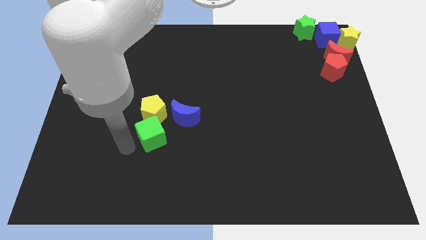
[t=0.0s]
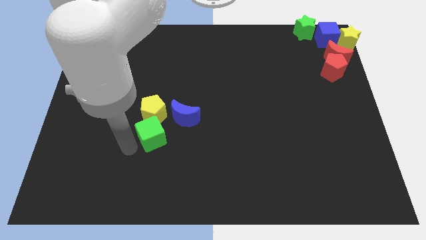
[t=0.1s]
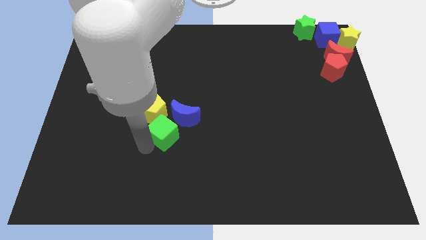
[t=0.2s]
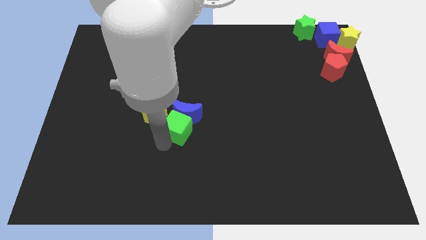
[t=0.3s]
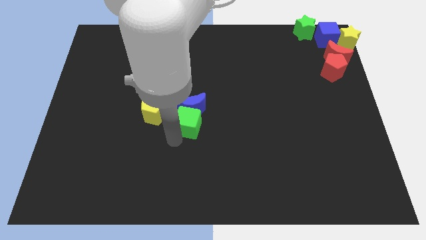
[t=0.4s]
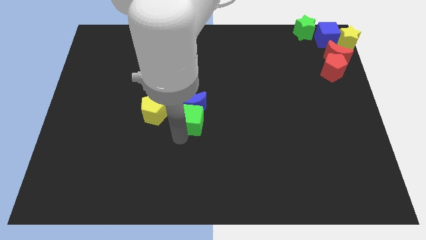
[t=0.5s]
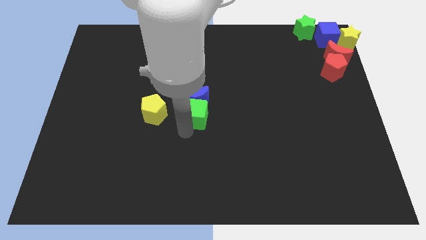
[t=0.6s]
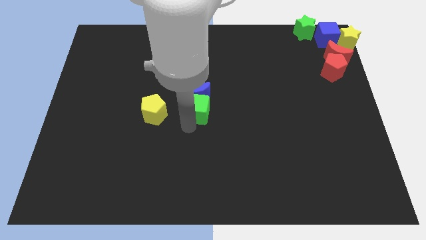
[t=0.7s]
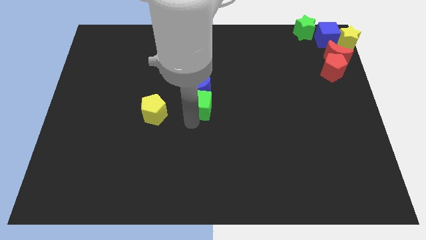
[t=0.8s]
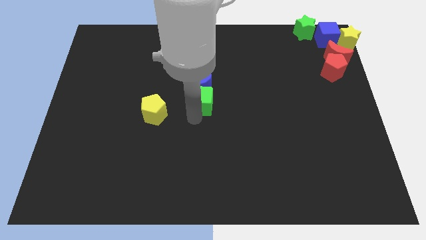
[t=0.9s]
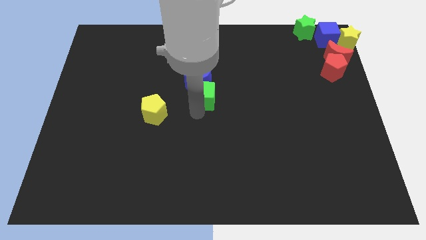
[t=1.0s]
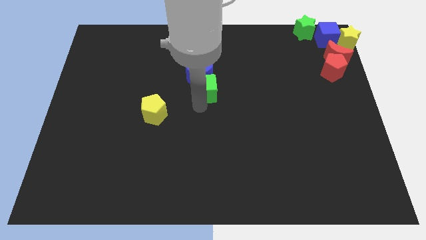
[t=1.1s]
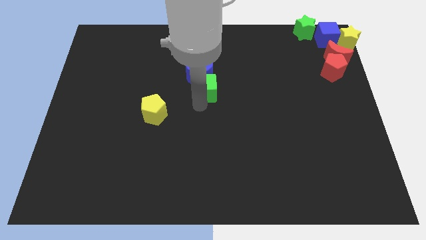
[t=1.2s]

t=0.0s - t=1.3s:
push the blue moon slightly towards top side of the board by green cube

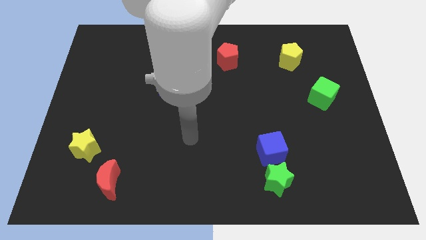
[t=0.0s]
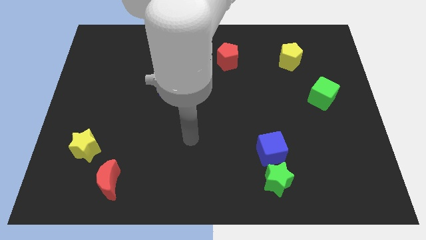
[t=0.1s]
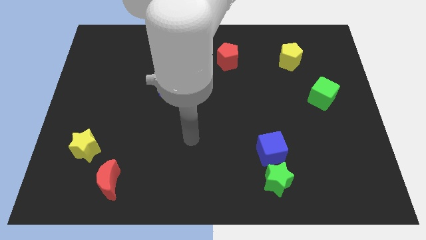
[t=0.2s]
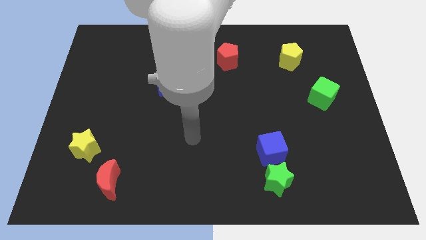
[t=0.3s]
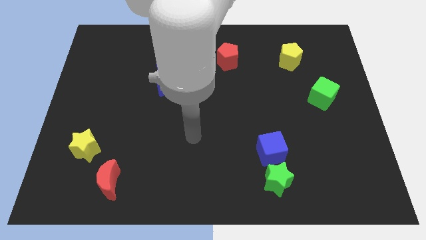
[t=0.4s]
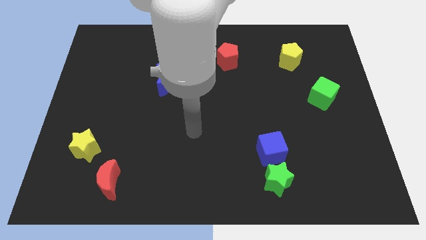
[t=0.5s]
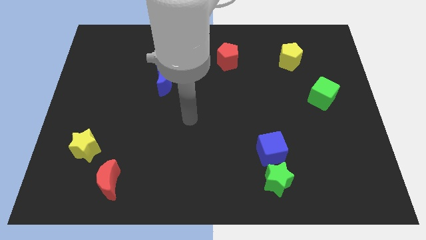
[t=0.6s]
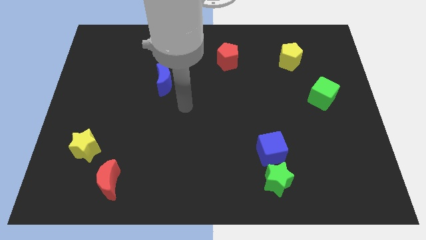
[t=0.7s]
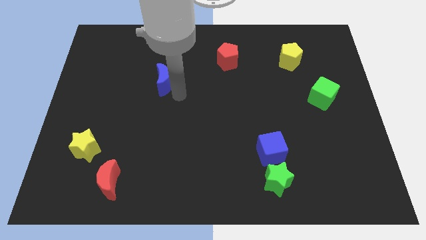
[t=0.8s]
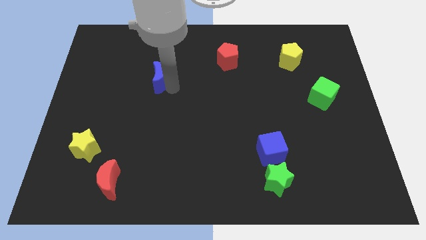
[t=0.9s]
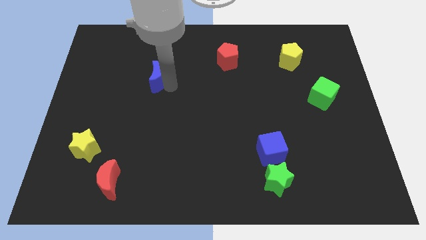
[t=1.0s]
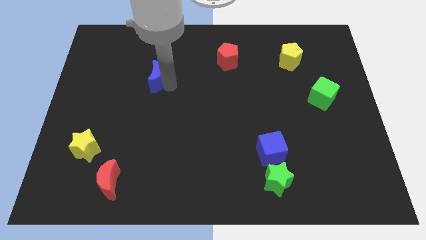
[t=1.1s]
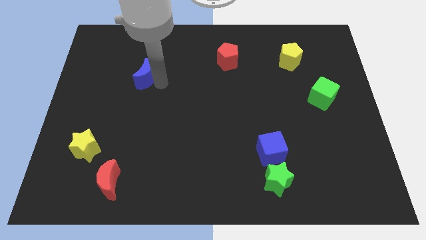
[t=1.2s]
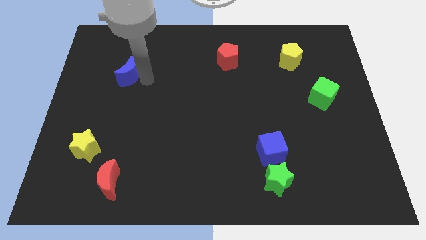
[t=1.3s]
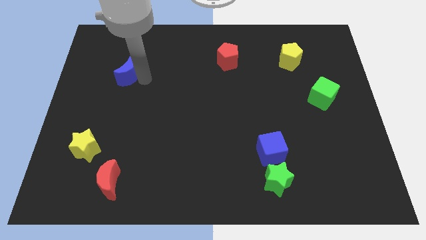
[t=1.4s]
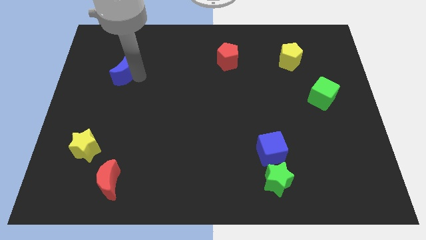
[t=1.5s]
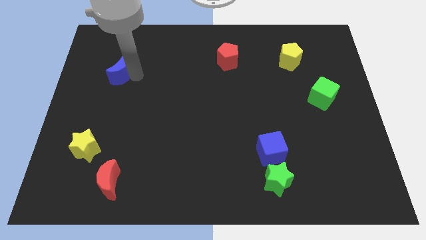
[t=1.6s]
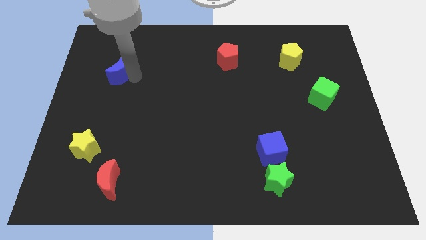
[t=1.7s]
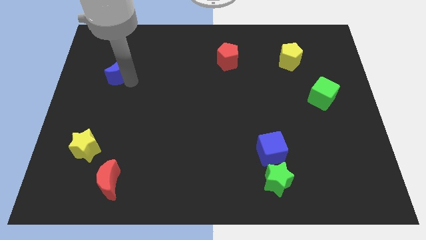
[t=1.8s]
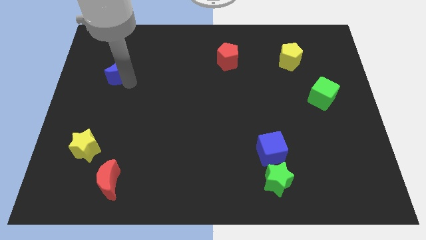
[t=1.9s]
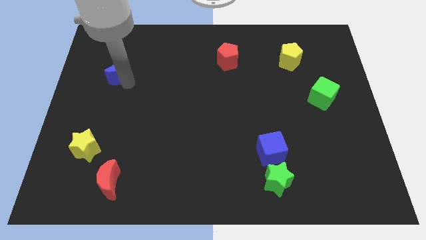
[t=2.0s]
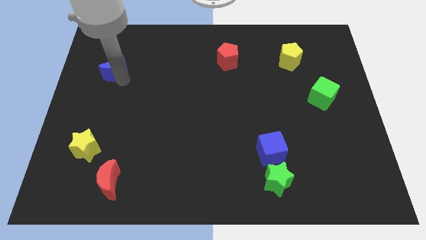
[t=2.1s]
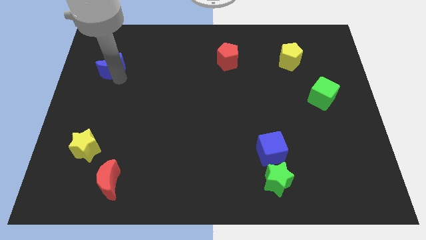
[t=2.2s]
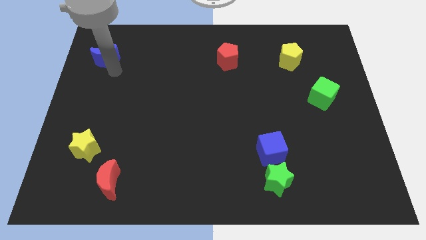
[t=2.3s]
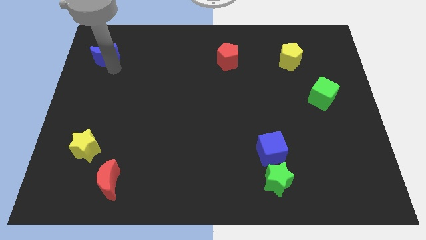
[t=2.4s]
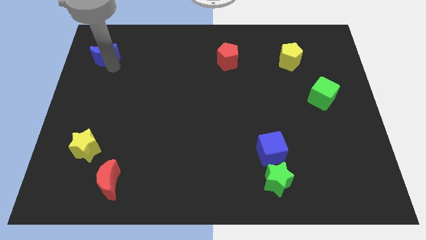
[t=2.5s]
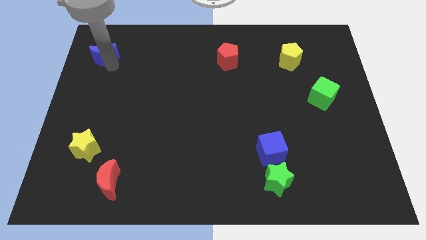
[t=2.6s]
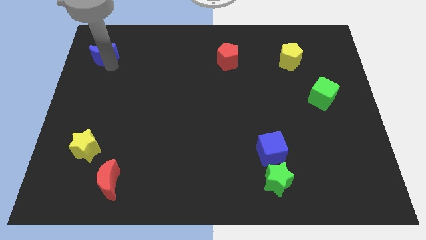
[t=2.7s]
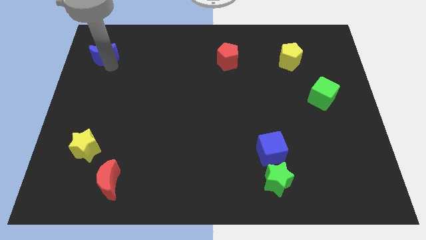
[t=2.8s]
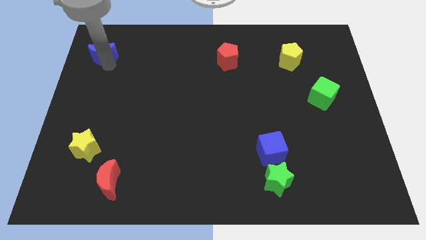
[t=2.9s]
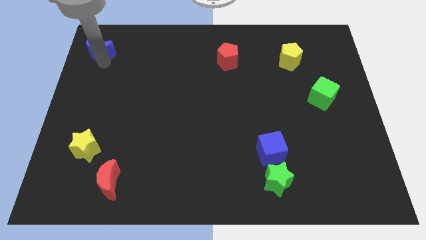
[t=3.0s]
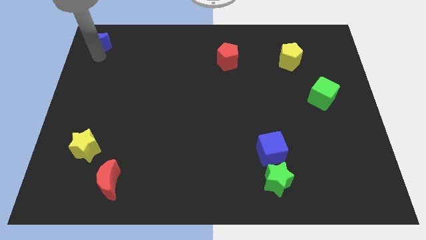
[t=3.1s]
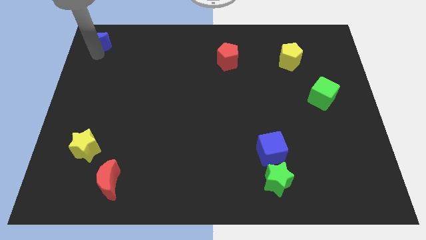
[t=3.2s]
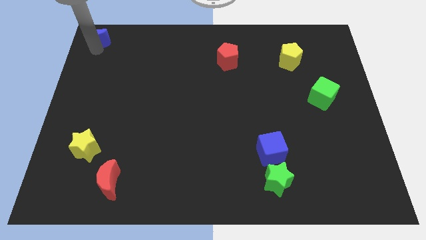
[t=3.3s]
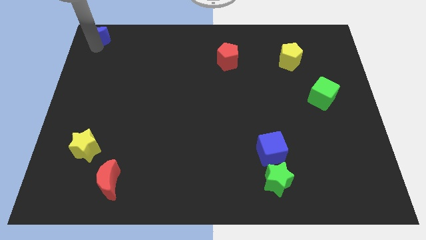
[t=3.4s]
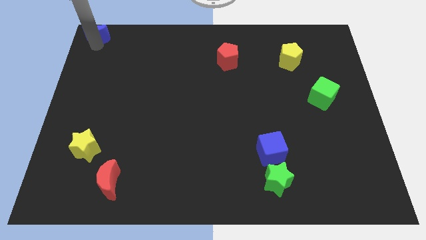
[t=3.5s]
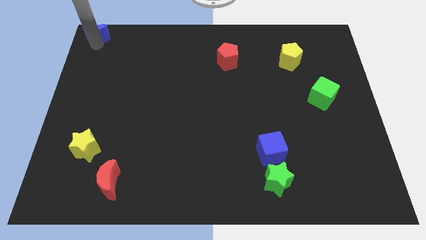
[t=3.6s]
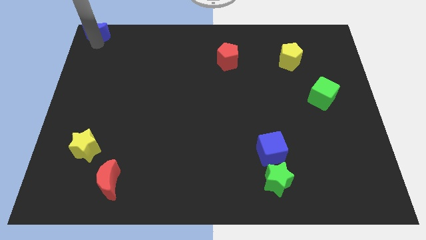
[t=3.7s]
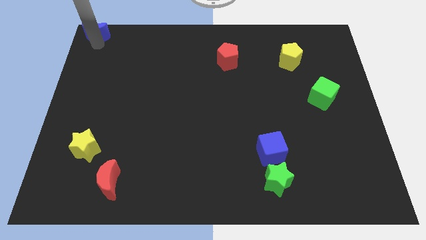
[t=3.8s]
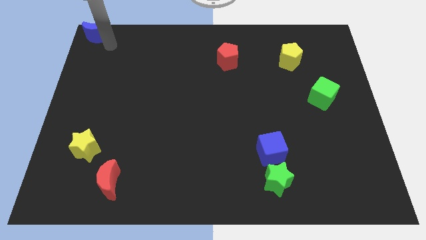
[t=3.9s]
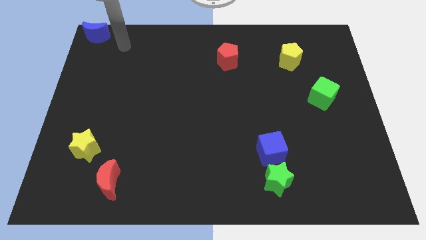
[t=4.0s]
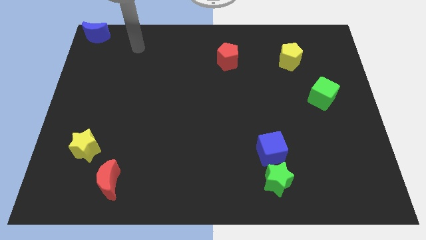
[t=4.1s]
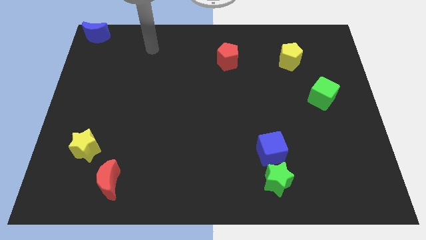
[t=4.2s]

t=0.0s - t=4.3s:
move the blue moon to the top left corner

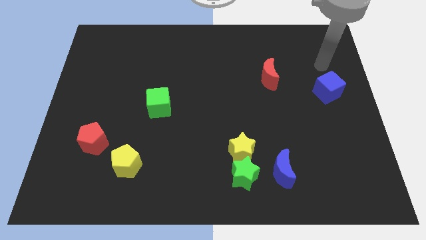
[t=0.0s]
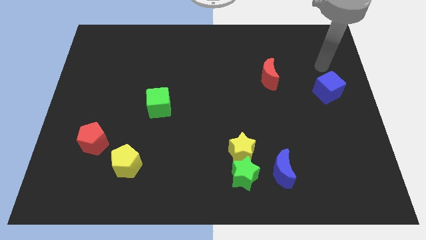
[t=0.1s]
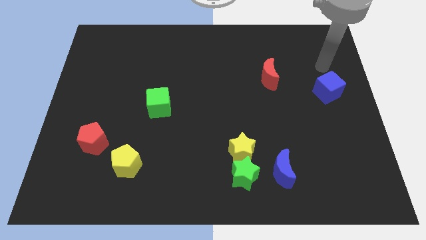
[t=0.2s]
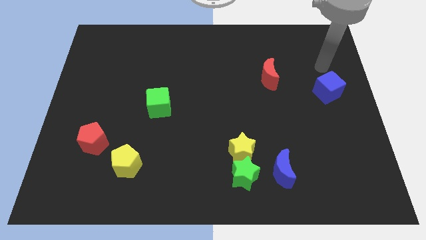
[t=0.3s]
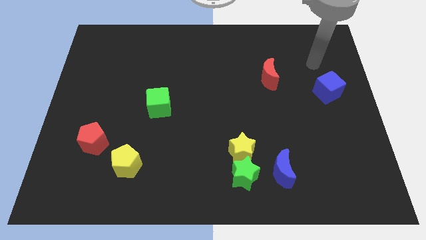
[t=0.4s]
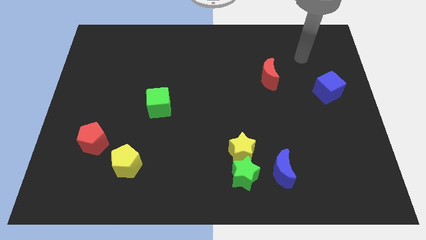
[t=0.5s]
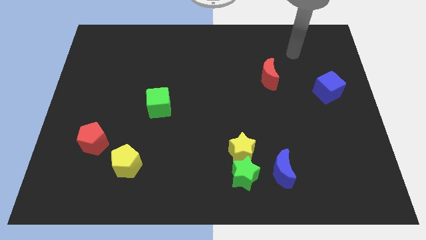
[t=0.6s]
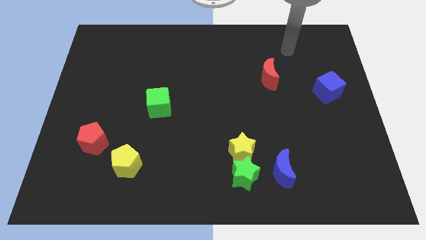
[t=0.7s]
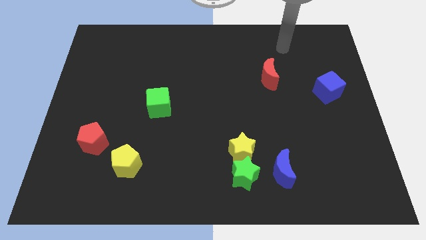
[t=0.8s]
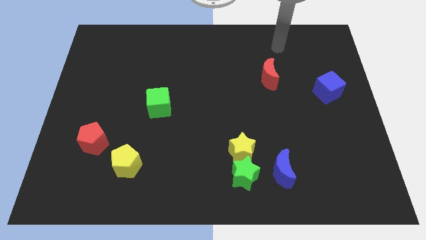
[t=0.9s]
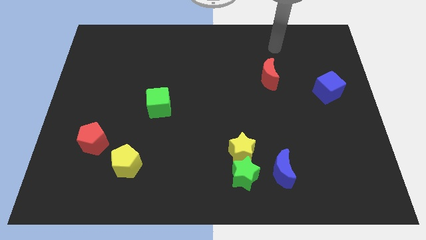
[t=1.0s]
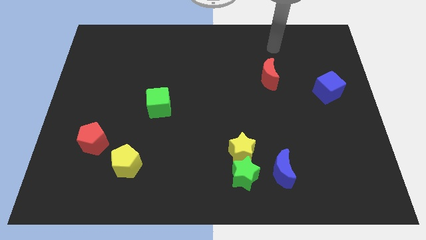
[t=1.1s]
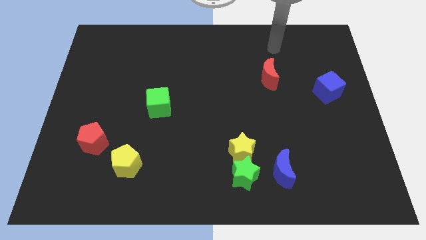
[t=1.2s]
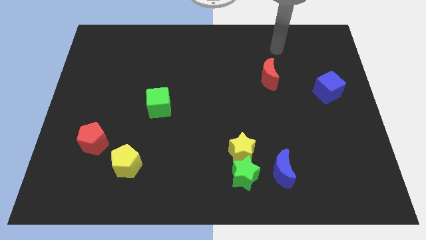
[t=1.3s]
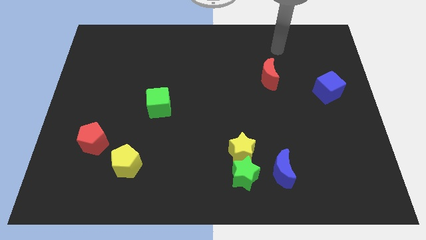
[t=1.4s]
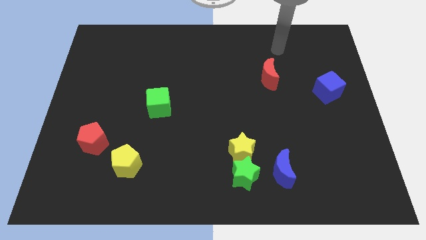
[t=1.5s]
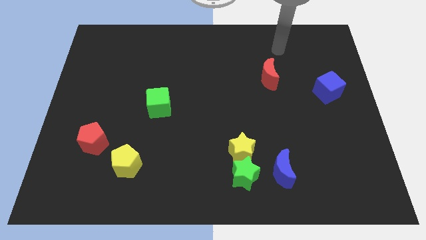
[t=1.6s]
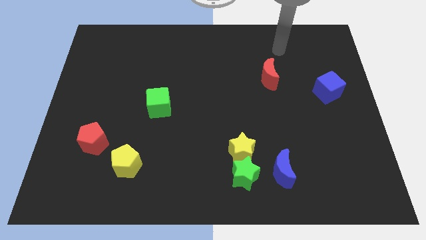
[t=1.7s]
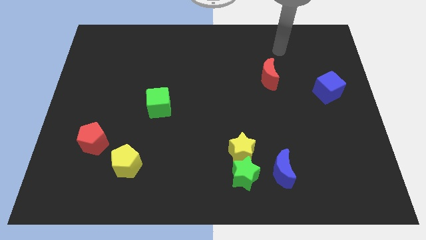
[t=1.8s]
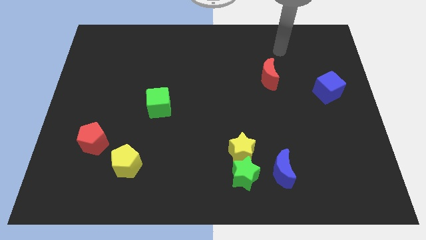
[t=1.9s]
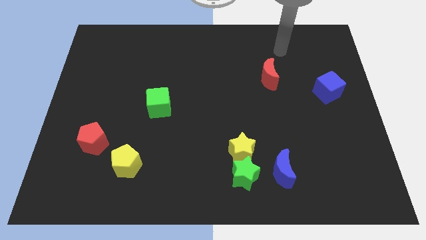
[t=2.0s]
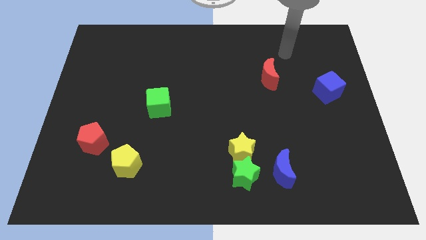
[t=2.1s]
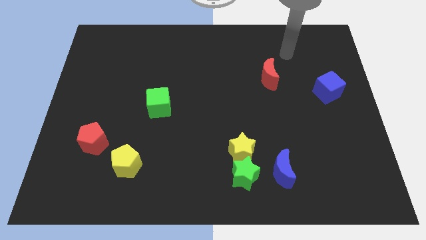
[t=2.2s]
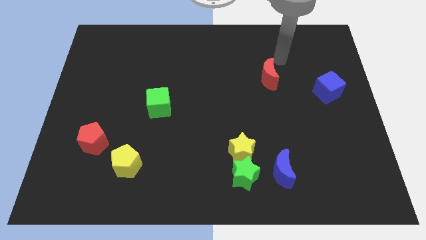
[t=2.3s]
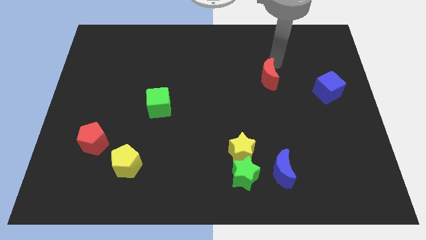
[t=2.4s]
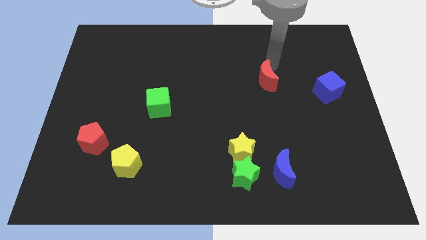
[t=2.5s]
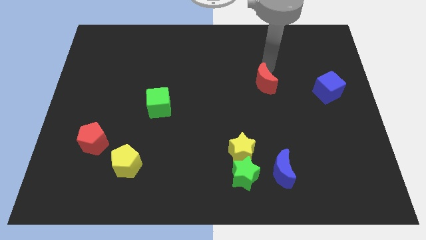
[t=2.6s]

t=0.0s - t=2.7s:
tap on red moon

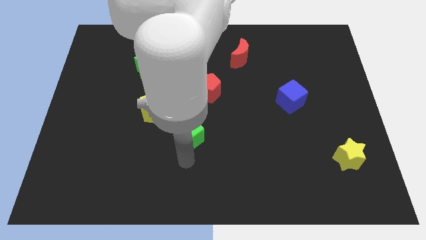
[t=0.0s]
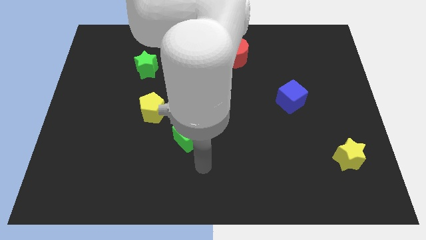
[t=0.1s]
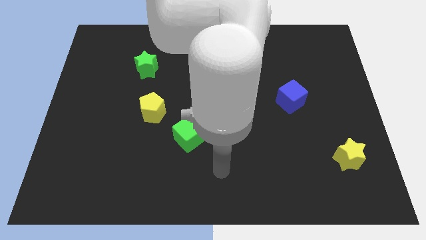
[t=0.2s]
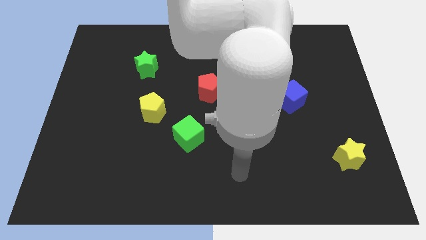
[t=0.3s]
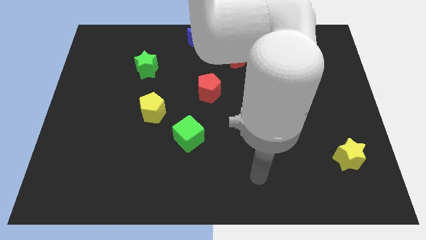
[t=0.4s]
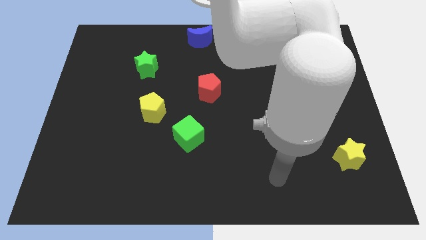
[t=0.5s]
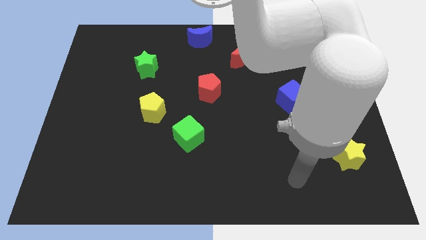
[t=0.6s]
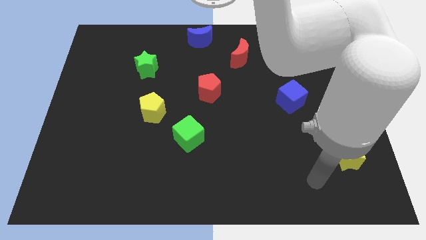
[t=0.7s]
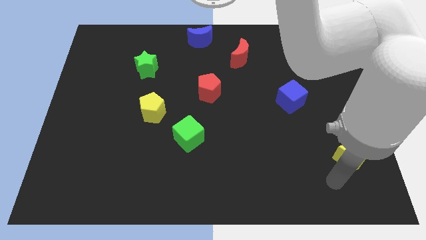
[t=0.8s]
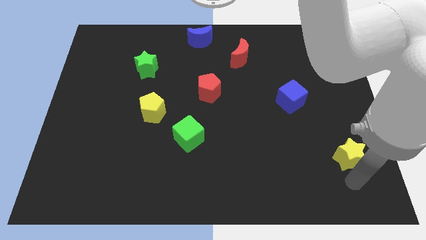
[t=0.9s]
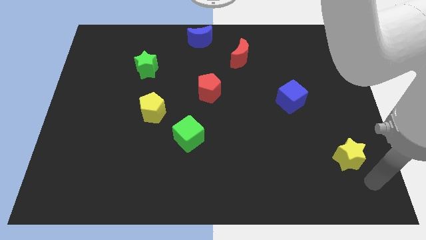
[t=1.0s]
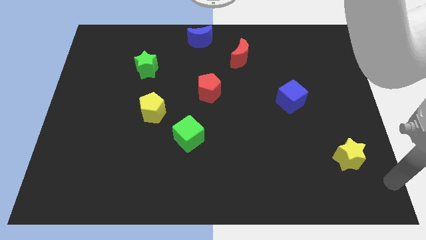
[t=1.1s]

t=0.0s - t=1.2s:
move your arm to the center right
